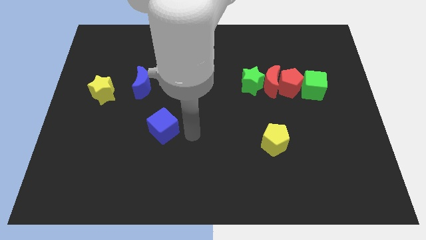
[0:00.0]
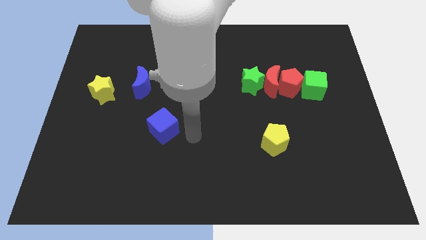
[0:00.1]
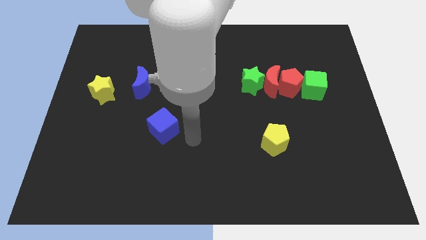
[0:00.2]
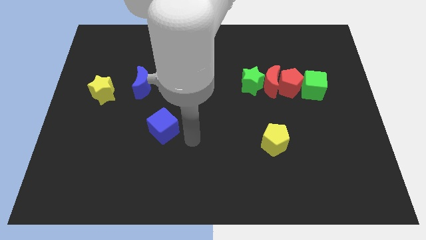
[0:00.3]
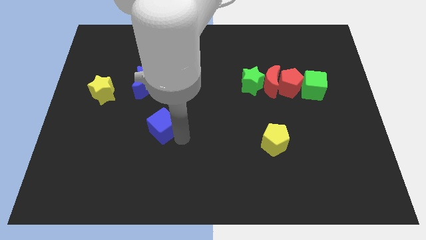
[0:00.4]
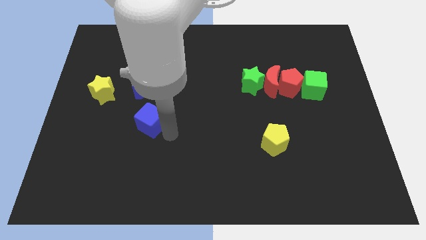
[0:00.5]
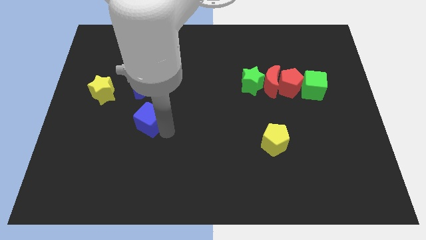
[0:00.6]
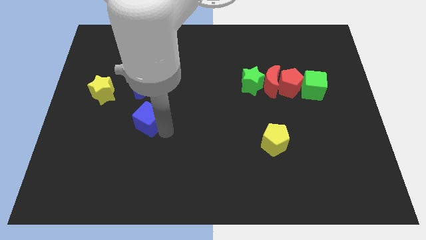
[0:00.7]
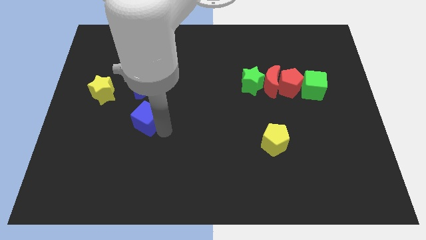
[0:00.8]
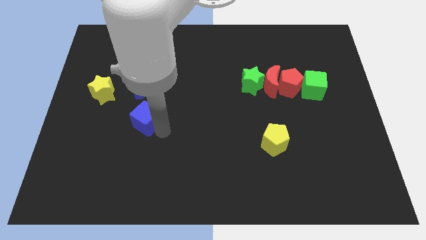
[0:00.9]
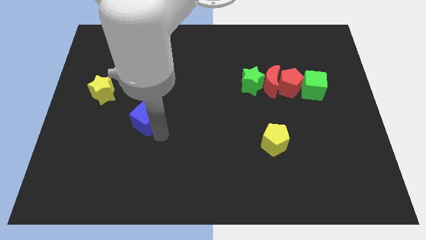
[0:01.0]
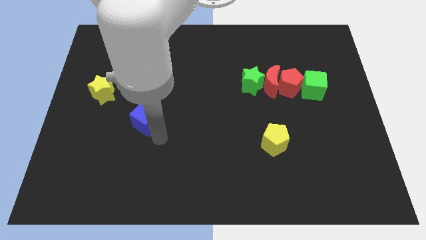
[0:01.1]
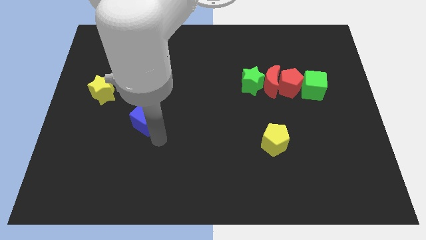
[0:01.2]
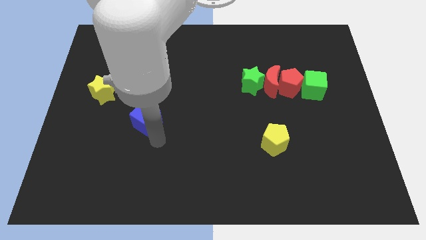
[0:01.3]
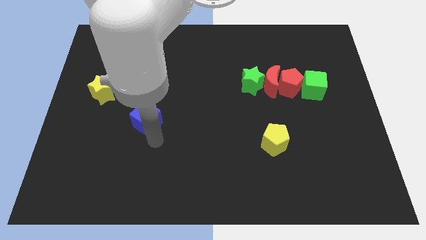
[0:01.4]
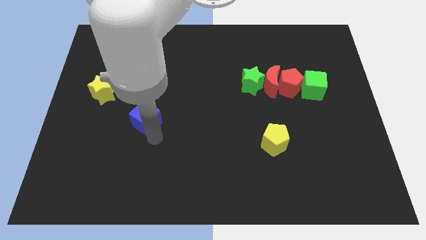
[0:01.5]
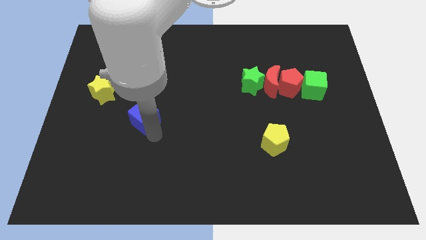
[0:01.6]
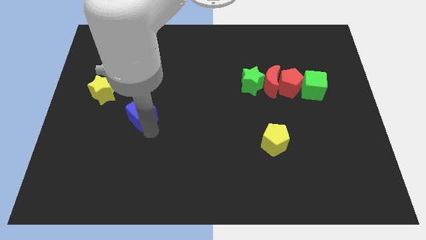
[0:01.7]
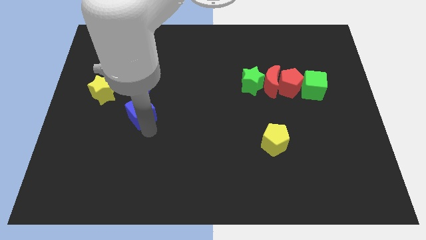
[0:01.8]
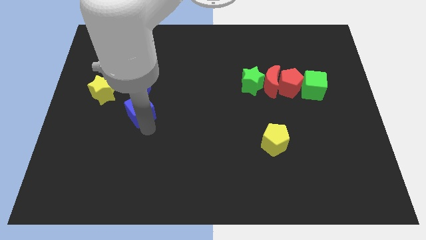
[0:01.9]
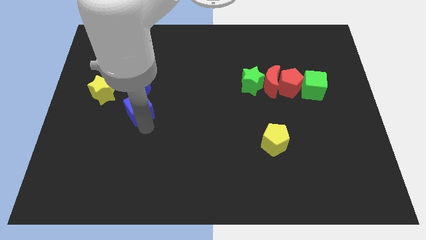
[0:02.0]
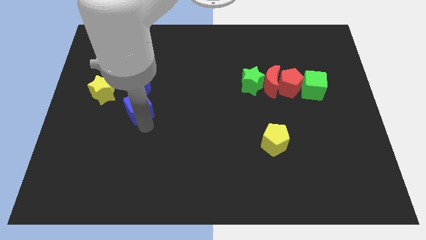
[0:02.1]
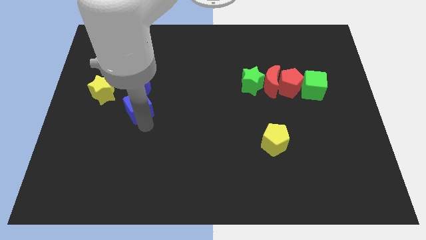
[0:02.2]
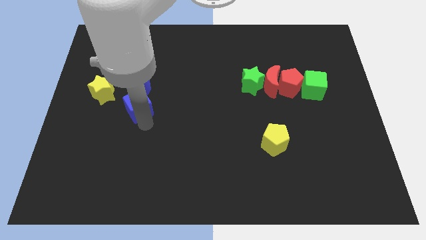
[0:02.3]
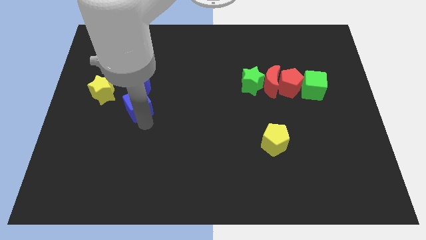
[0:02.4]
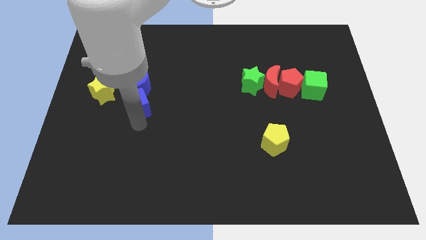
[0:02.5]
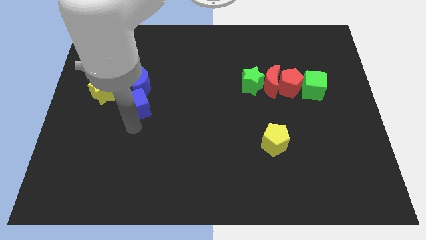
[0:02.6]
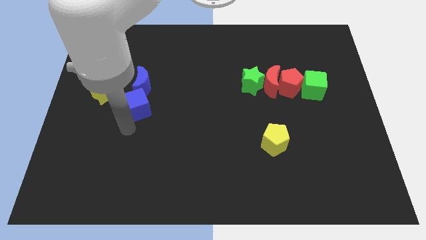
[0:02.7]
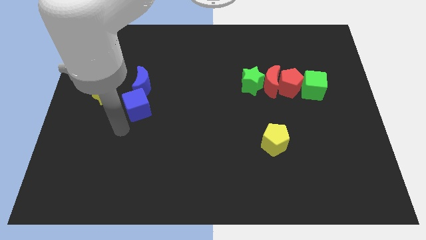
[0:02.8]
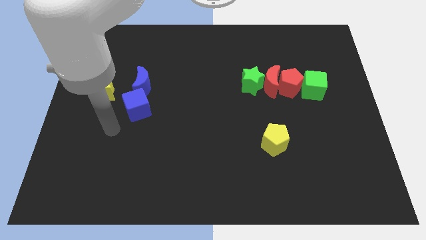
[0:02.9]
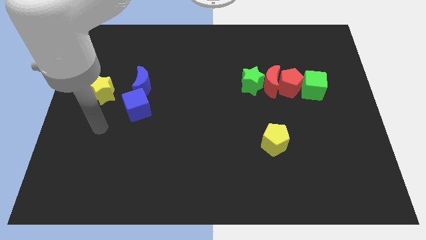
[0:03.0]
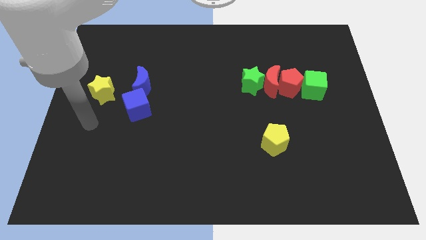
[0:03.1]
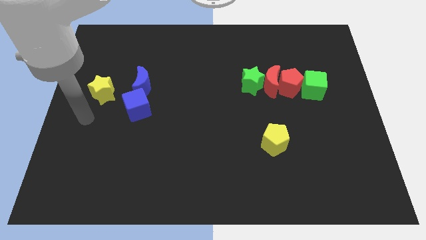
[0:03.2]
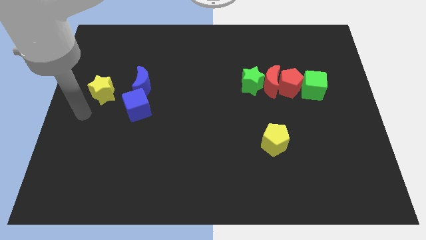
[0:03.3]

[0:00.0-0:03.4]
move blue cube to the bottom of blue crescent

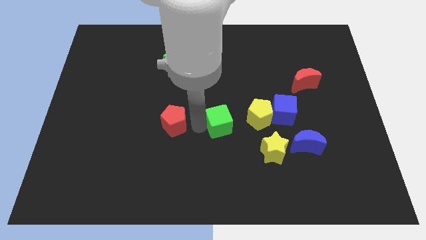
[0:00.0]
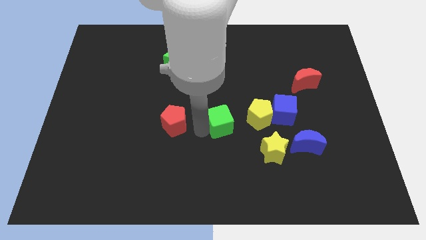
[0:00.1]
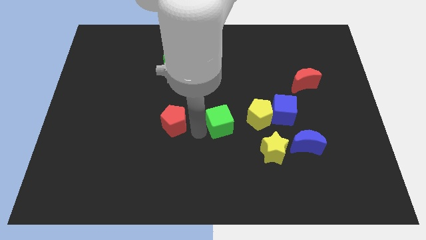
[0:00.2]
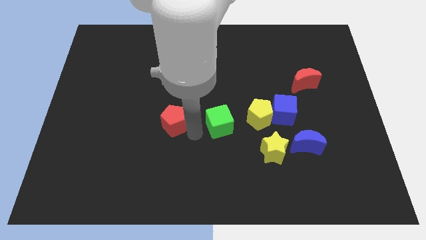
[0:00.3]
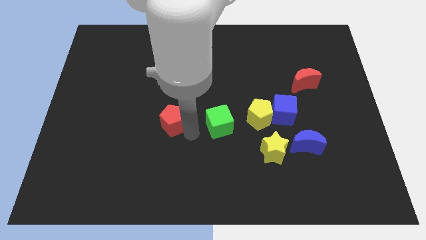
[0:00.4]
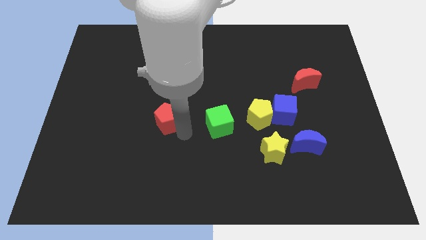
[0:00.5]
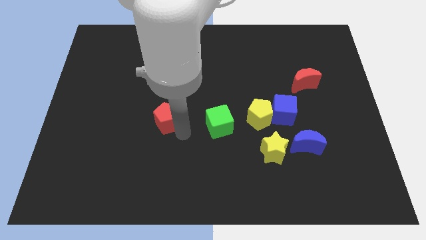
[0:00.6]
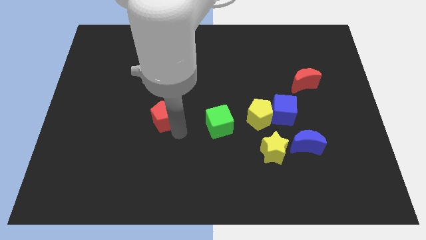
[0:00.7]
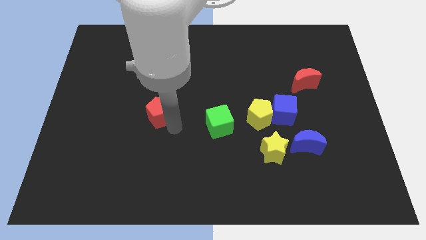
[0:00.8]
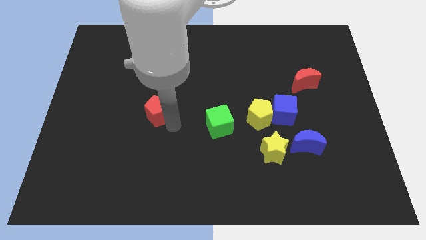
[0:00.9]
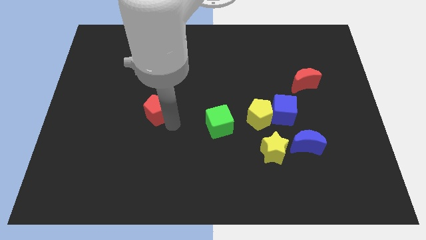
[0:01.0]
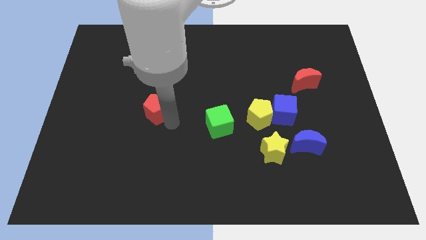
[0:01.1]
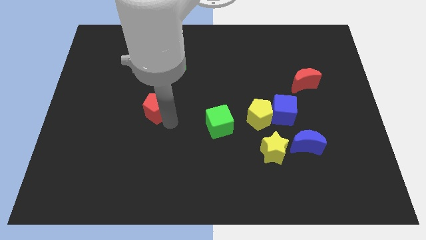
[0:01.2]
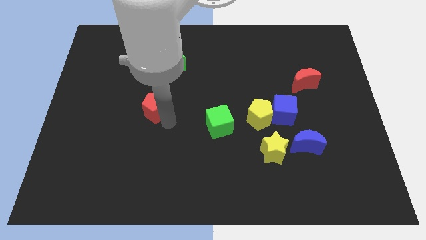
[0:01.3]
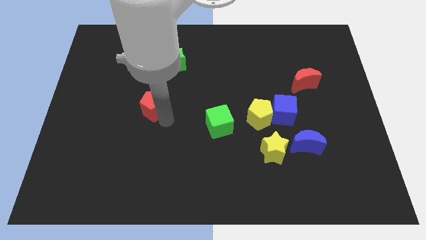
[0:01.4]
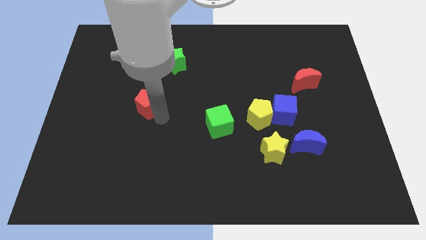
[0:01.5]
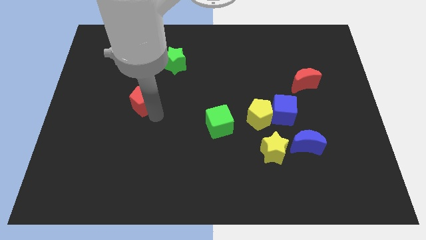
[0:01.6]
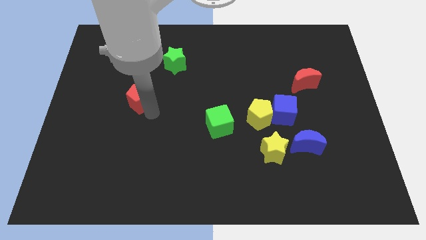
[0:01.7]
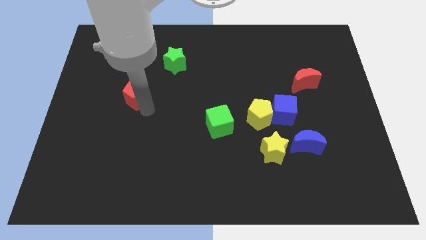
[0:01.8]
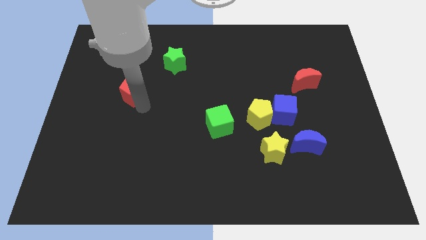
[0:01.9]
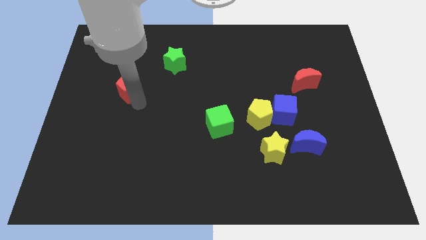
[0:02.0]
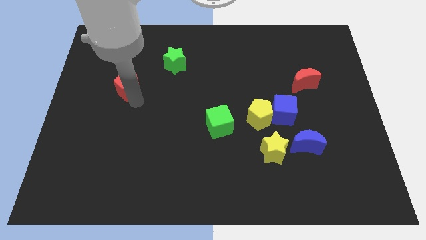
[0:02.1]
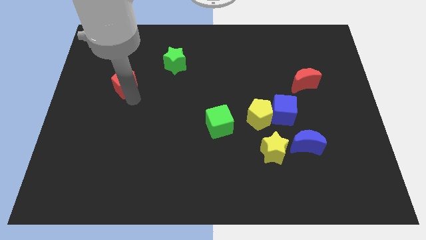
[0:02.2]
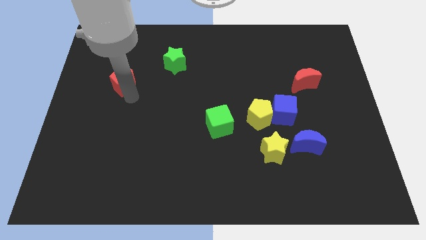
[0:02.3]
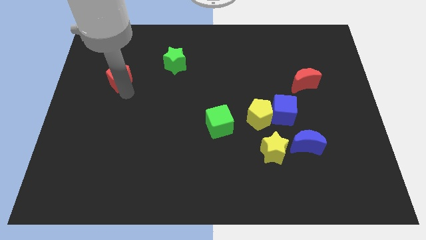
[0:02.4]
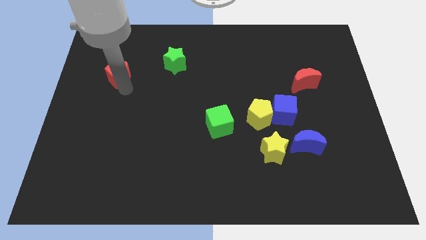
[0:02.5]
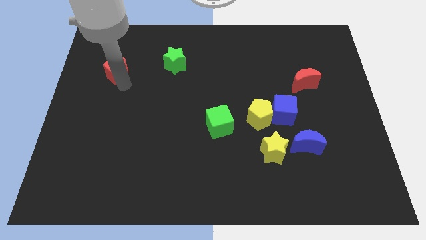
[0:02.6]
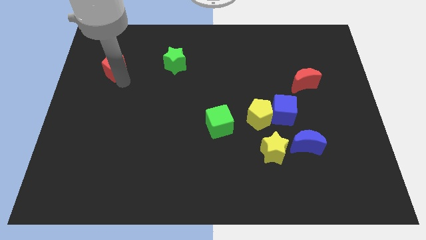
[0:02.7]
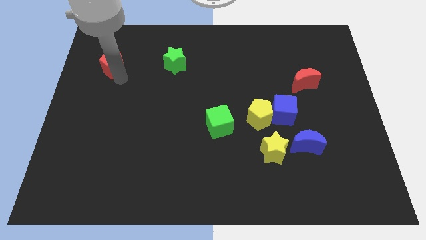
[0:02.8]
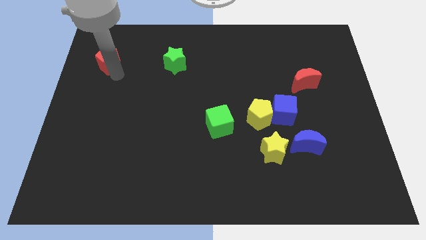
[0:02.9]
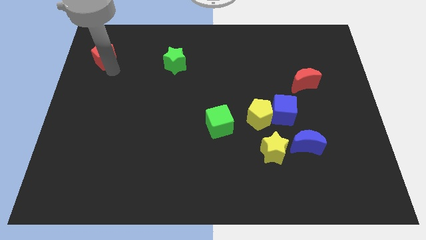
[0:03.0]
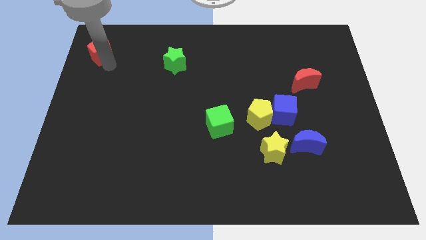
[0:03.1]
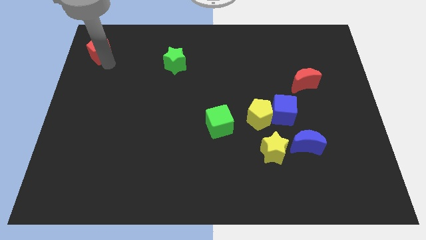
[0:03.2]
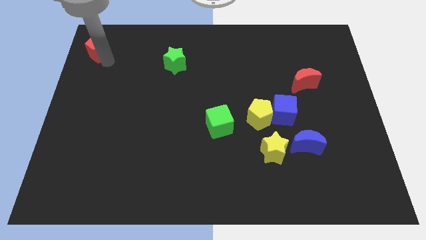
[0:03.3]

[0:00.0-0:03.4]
push the red pentagon towards the top left corner of the board

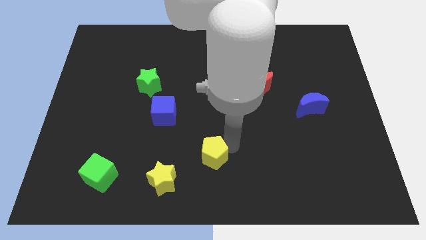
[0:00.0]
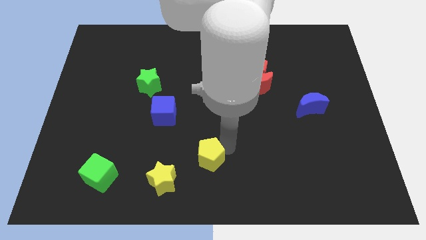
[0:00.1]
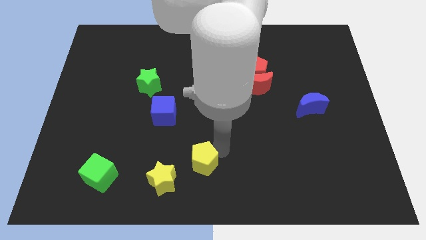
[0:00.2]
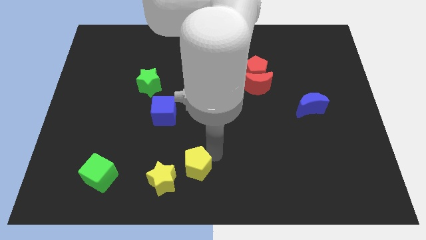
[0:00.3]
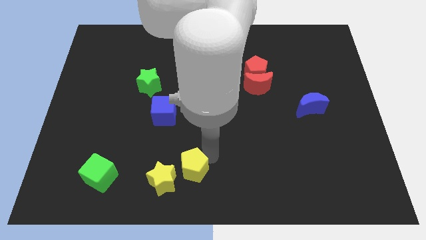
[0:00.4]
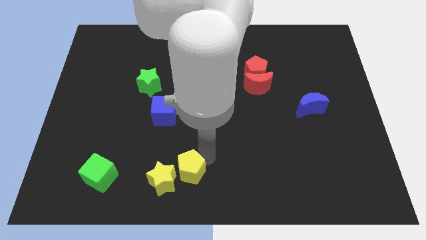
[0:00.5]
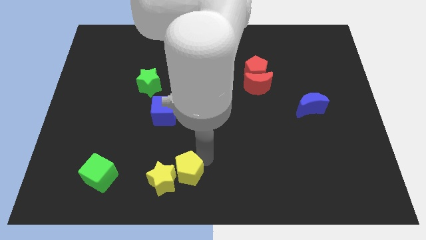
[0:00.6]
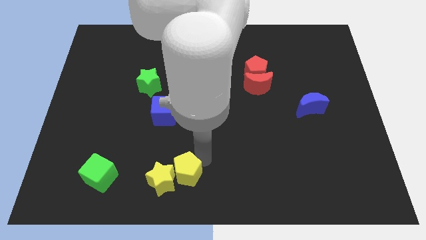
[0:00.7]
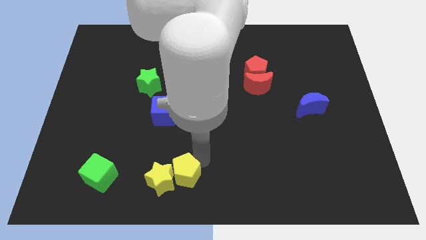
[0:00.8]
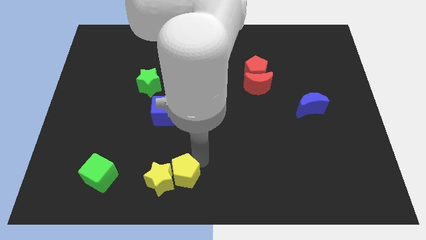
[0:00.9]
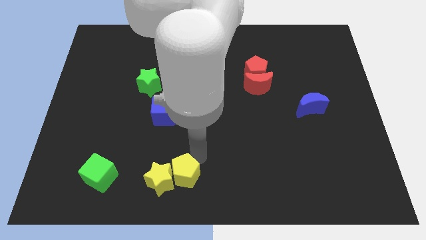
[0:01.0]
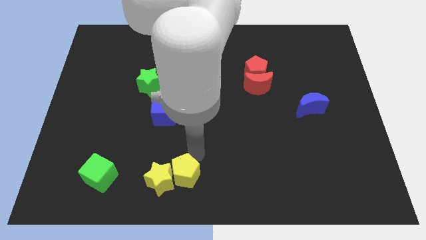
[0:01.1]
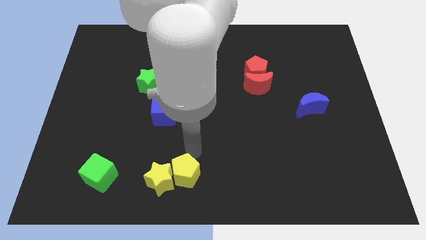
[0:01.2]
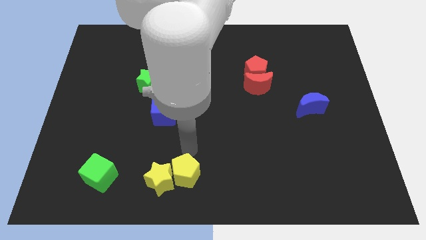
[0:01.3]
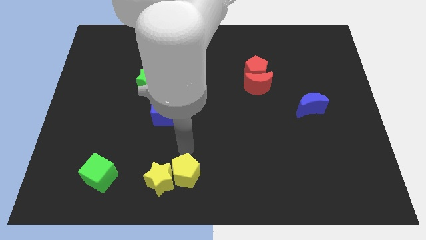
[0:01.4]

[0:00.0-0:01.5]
push the yellow pentagon into the yellow star

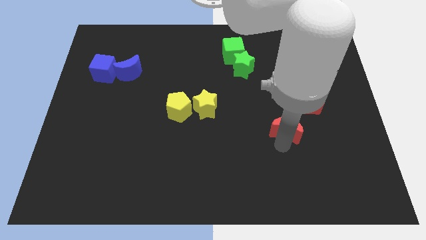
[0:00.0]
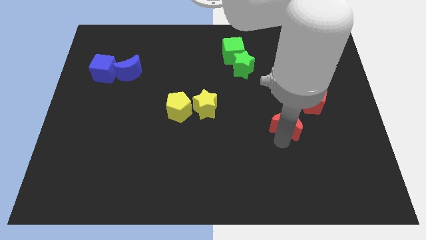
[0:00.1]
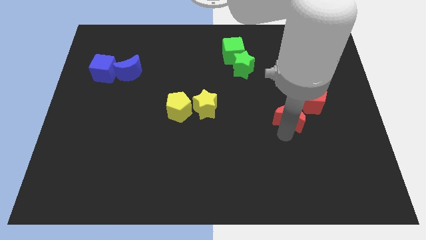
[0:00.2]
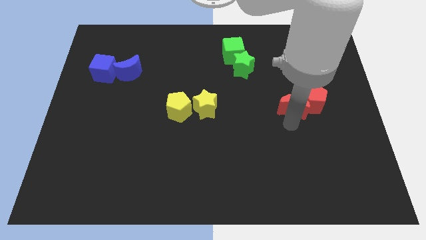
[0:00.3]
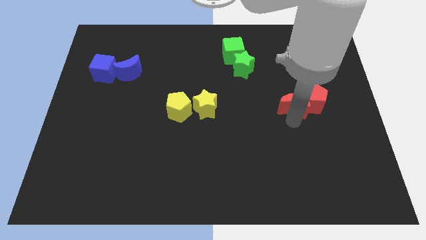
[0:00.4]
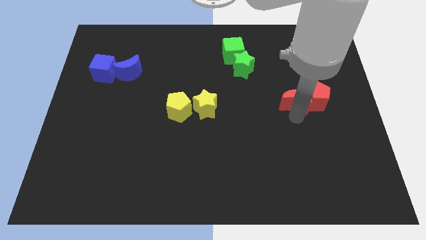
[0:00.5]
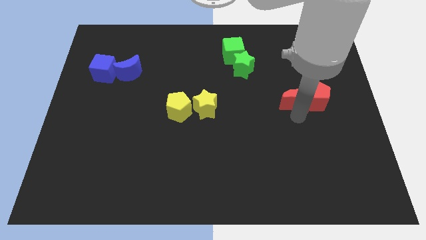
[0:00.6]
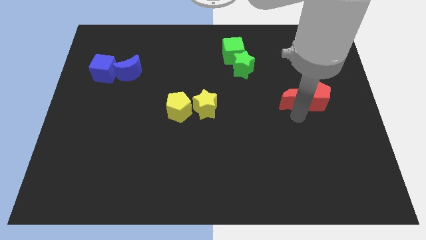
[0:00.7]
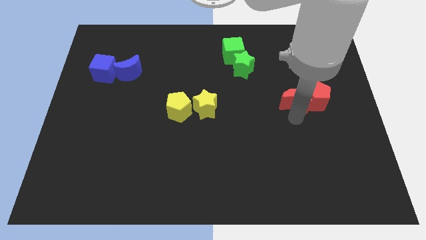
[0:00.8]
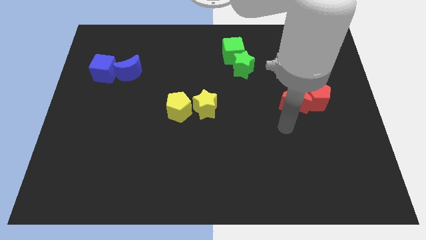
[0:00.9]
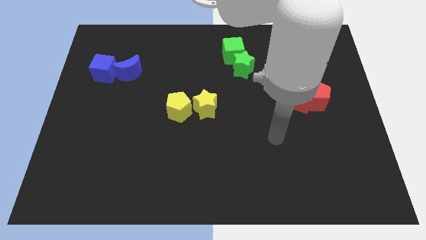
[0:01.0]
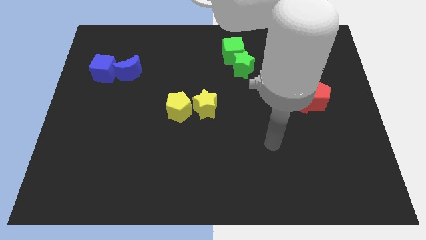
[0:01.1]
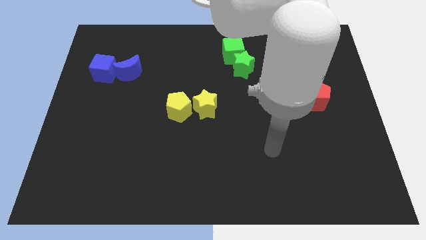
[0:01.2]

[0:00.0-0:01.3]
push the red crescent into the red pentagon
